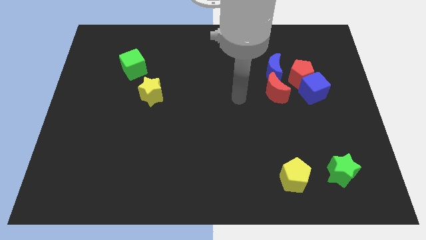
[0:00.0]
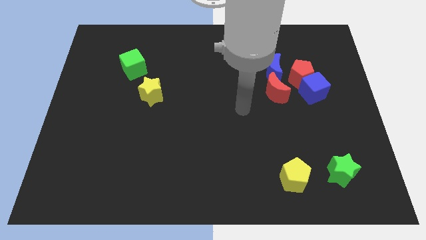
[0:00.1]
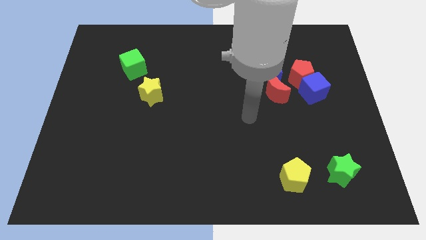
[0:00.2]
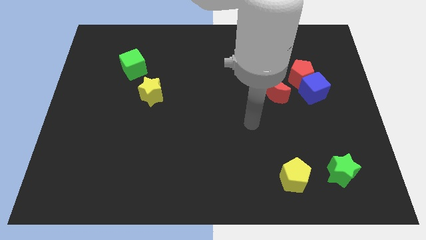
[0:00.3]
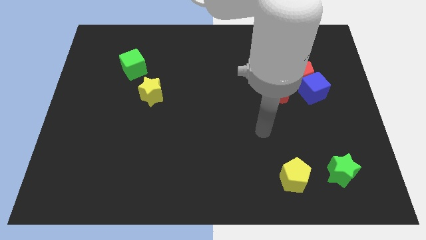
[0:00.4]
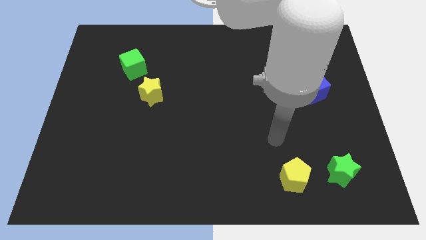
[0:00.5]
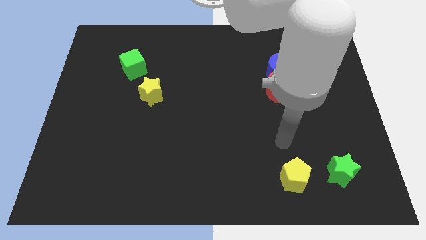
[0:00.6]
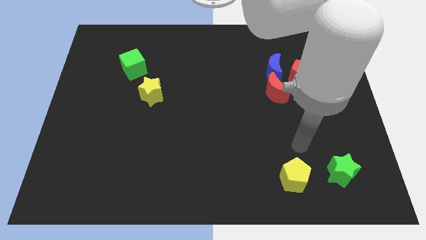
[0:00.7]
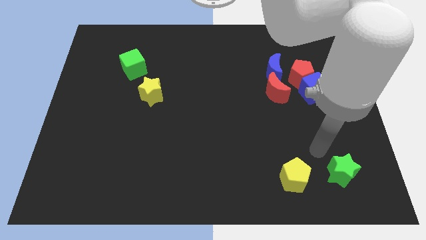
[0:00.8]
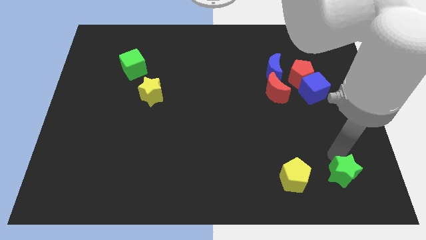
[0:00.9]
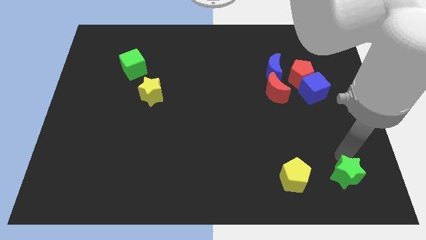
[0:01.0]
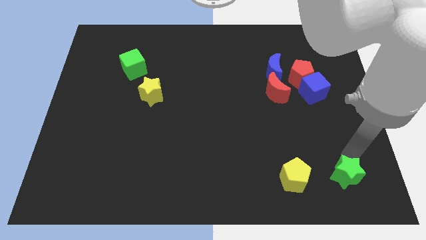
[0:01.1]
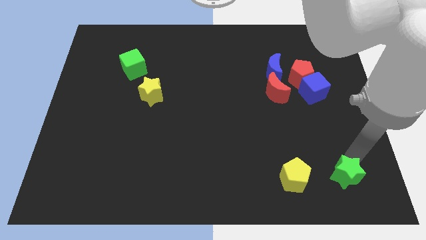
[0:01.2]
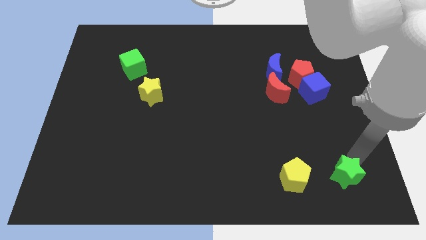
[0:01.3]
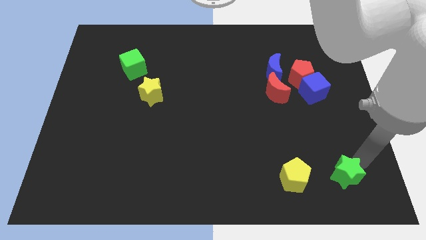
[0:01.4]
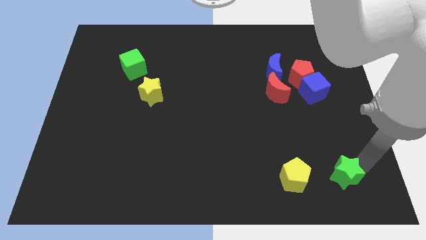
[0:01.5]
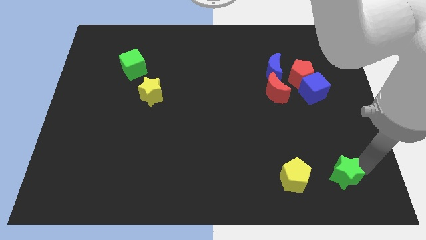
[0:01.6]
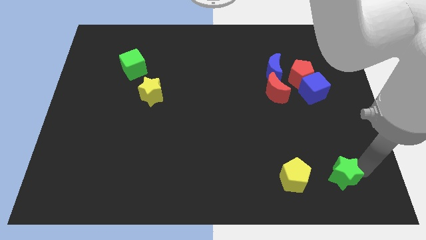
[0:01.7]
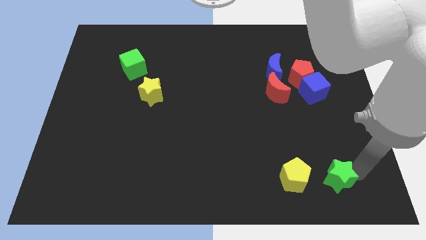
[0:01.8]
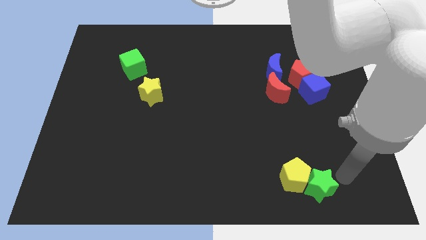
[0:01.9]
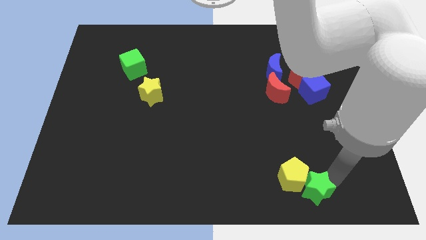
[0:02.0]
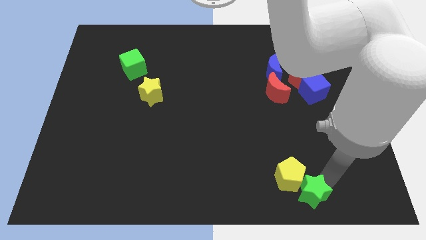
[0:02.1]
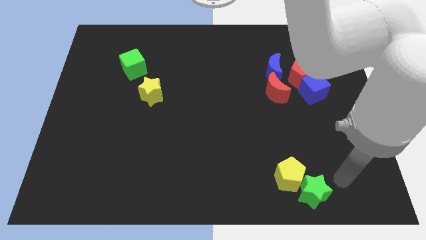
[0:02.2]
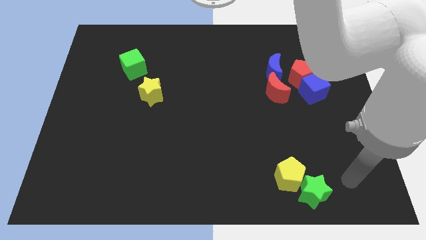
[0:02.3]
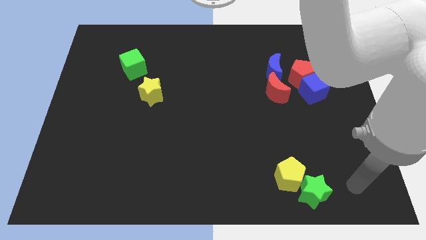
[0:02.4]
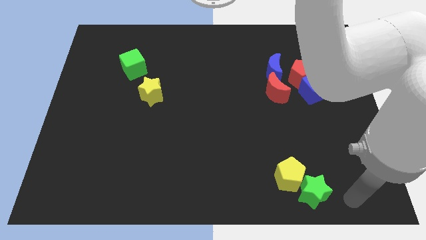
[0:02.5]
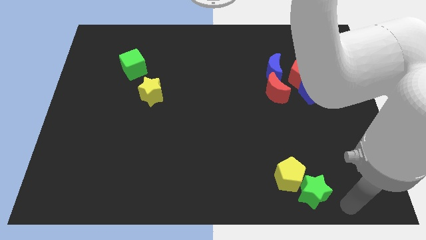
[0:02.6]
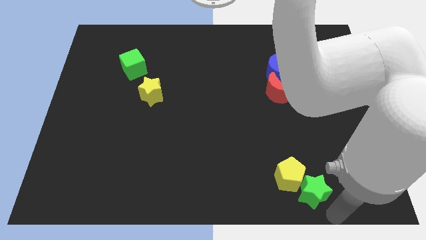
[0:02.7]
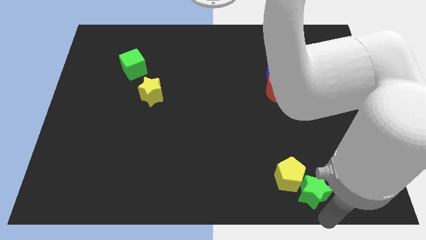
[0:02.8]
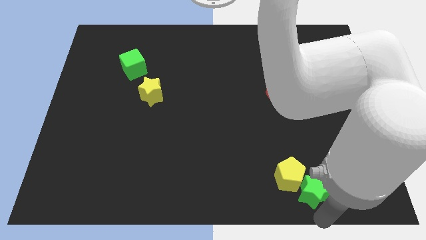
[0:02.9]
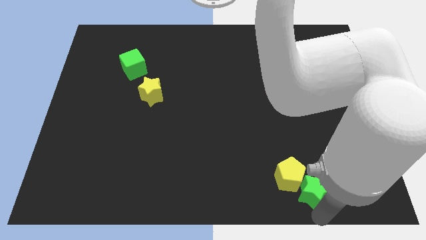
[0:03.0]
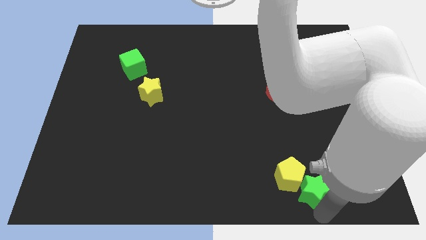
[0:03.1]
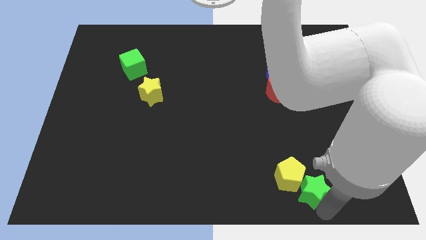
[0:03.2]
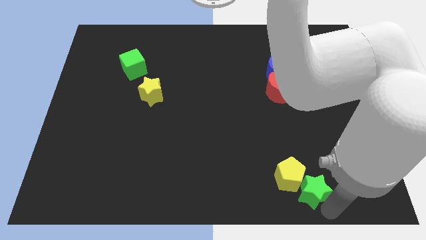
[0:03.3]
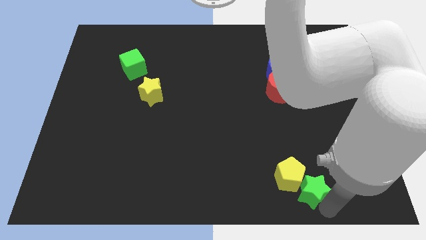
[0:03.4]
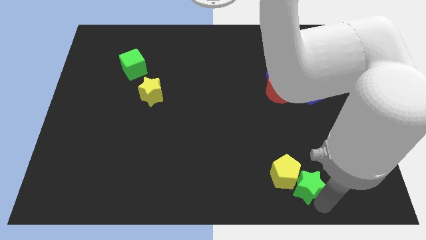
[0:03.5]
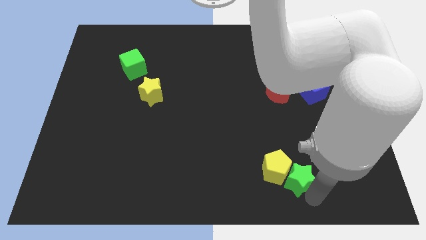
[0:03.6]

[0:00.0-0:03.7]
place the green star and yellow pentagon together

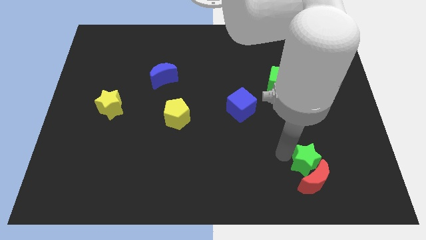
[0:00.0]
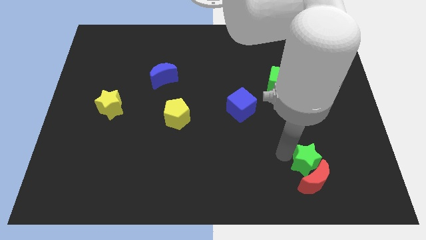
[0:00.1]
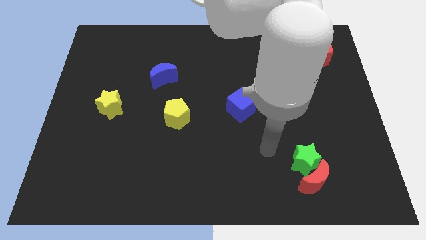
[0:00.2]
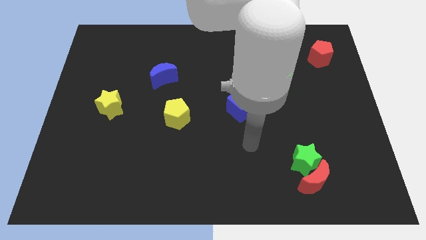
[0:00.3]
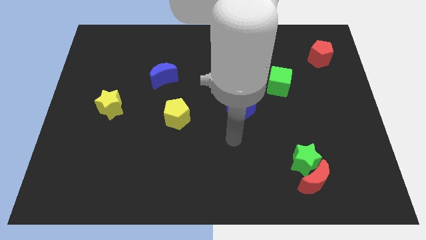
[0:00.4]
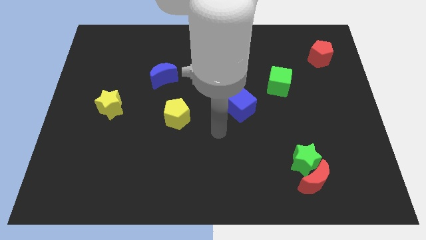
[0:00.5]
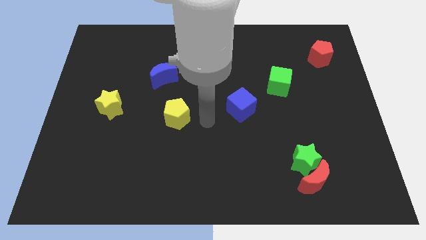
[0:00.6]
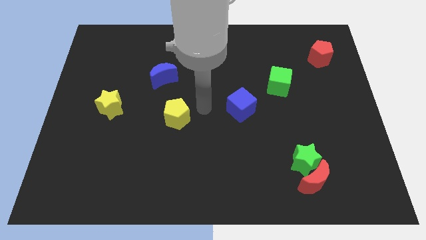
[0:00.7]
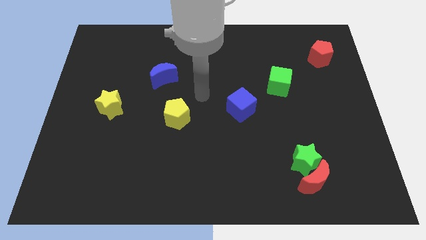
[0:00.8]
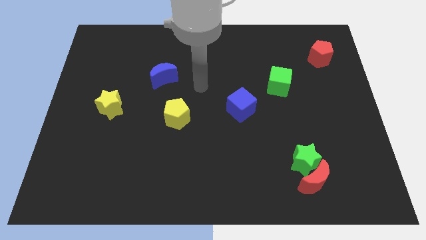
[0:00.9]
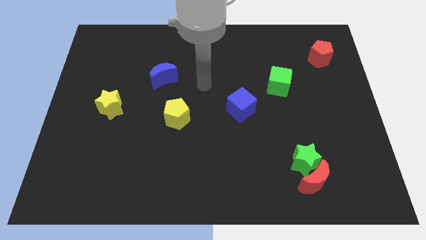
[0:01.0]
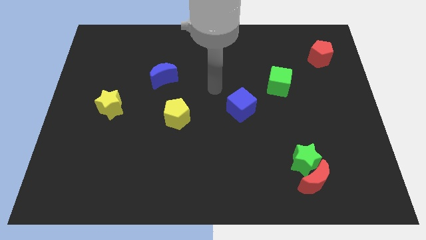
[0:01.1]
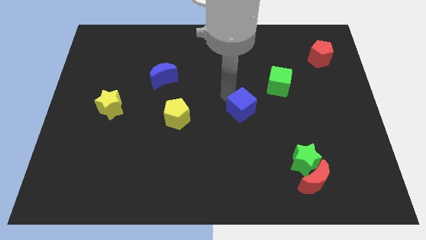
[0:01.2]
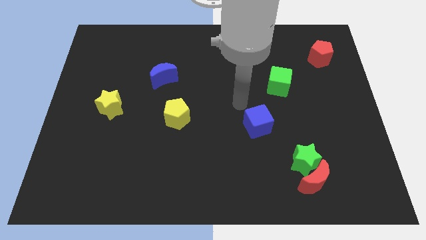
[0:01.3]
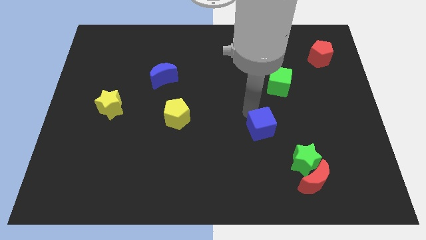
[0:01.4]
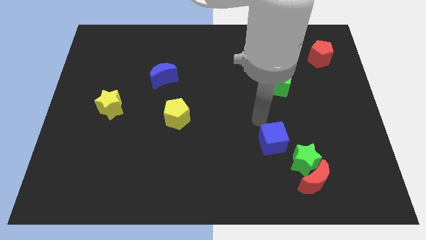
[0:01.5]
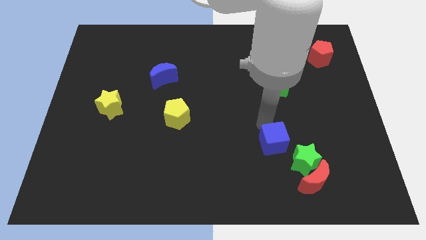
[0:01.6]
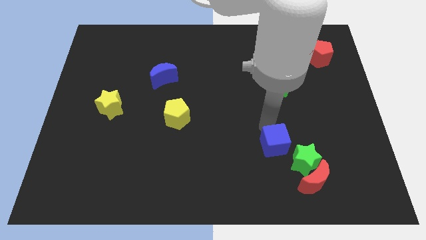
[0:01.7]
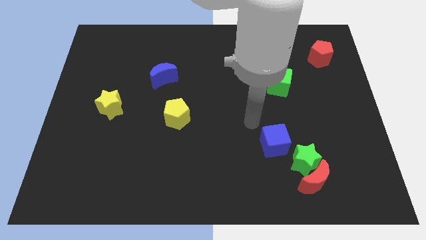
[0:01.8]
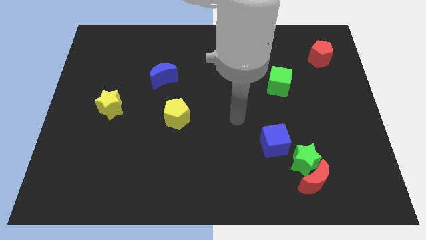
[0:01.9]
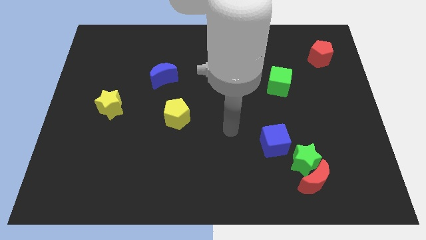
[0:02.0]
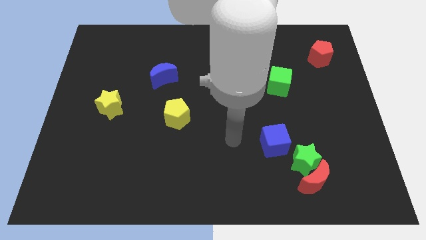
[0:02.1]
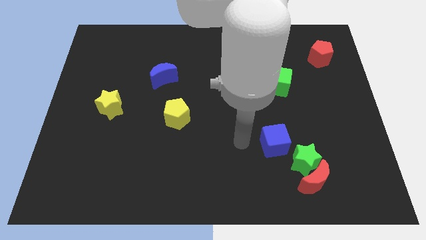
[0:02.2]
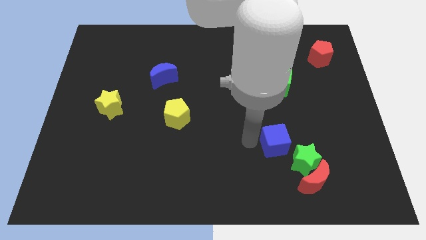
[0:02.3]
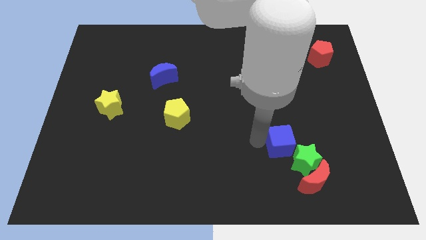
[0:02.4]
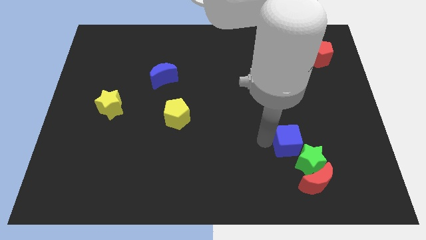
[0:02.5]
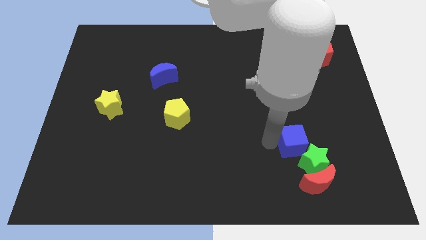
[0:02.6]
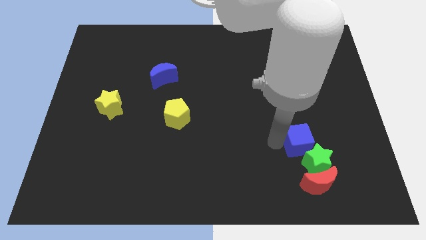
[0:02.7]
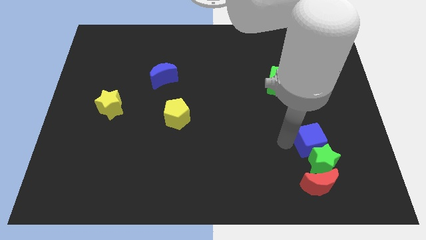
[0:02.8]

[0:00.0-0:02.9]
place the blue cube above the green star

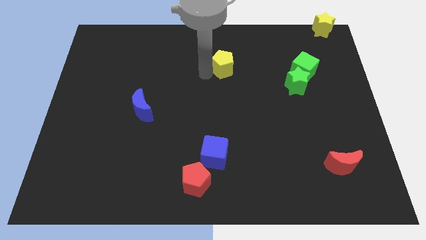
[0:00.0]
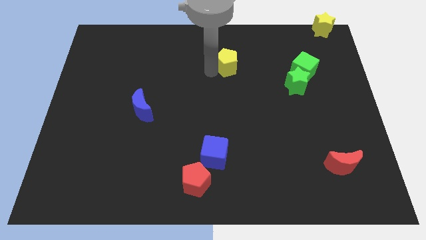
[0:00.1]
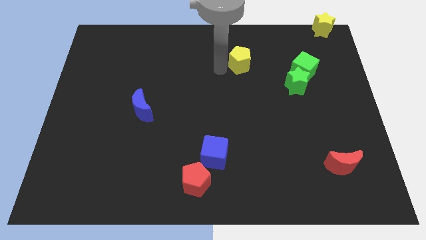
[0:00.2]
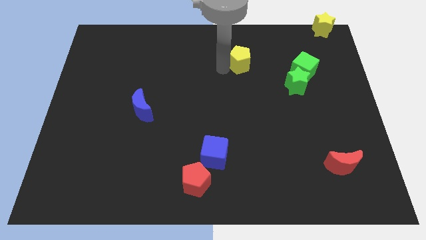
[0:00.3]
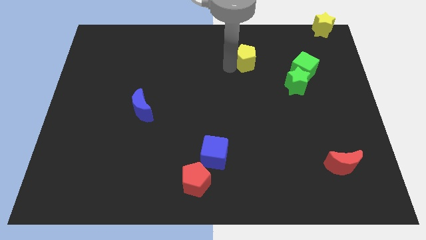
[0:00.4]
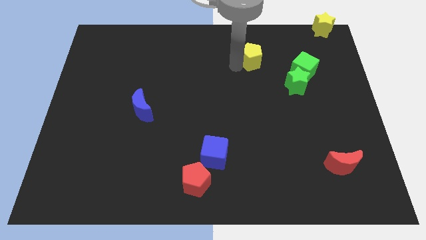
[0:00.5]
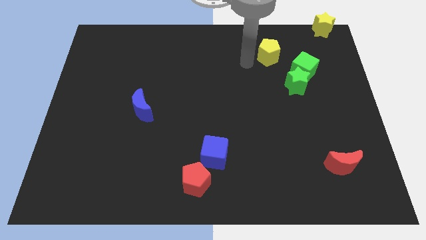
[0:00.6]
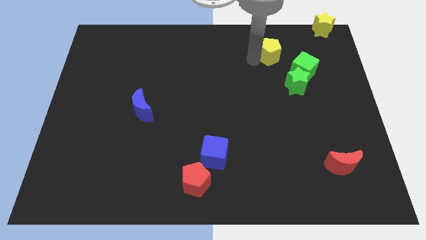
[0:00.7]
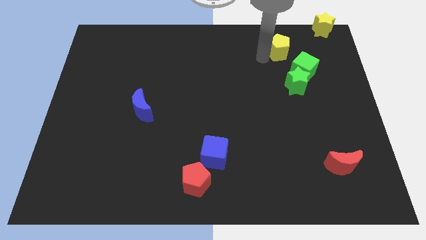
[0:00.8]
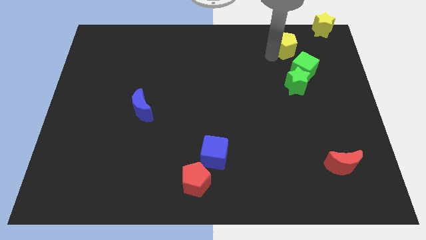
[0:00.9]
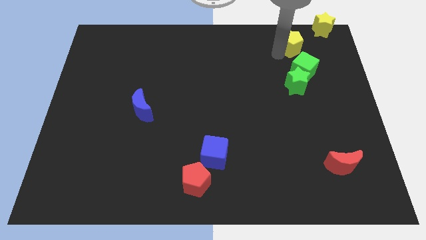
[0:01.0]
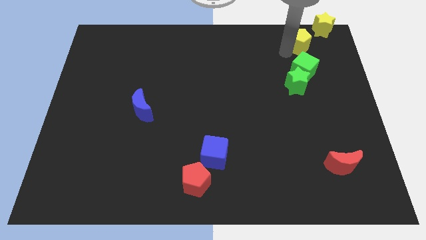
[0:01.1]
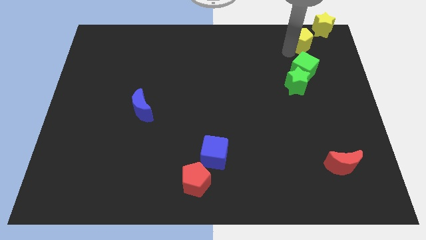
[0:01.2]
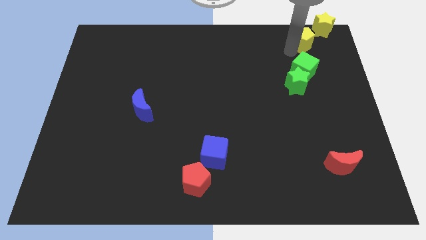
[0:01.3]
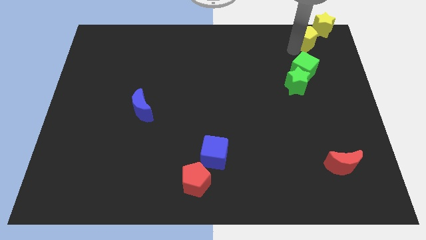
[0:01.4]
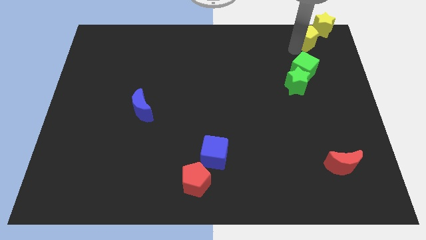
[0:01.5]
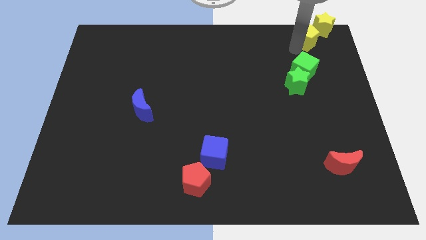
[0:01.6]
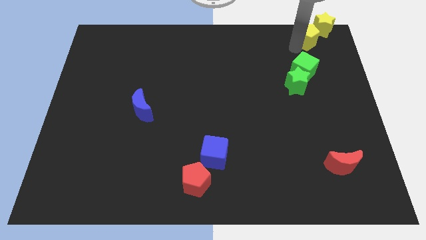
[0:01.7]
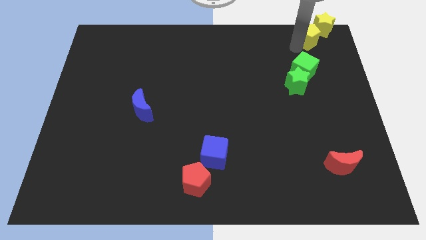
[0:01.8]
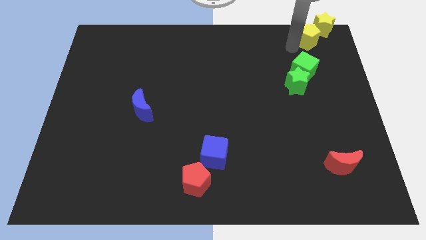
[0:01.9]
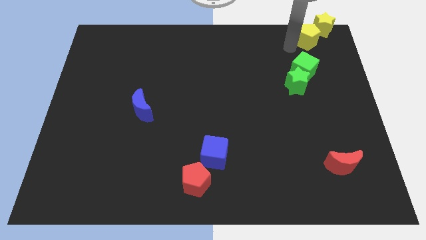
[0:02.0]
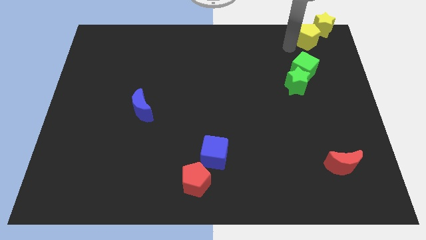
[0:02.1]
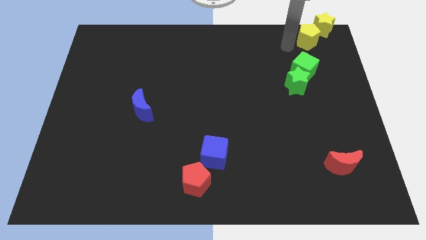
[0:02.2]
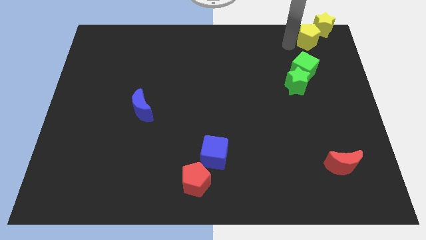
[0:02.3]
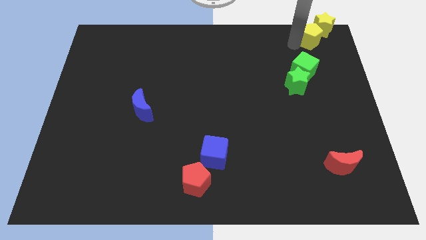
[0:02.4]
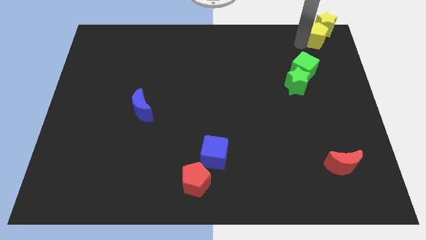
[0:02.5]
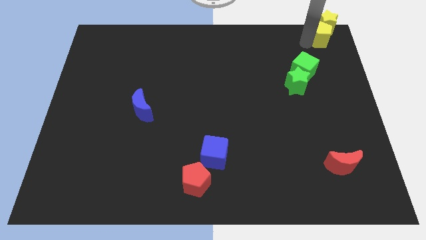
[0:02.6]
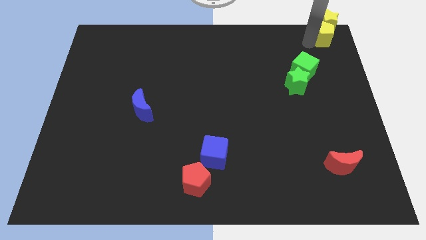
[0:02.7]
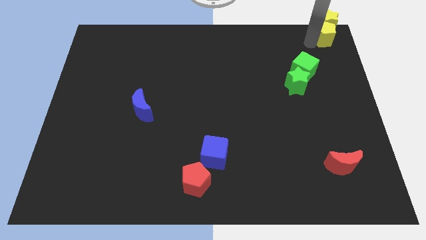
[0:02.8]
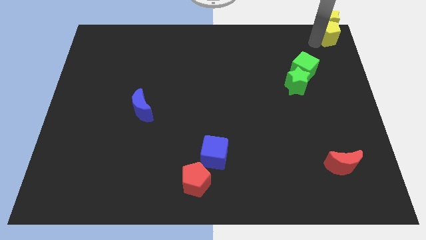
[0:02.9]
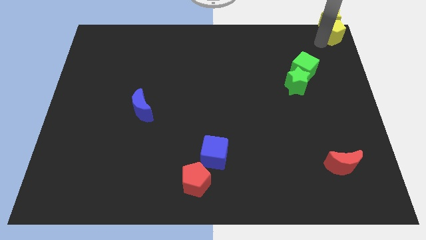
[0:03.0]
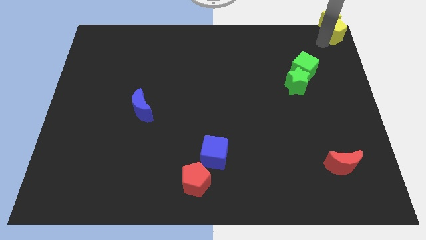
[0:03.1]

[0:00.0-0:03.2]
drag the yellow pentagon into the bottom side of the yellow star
